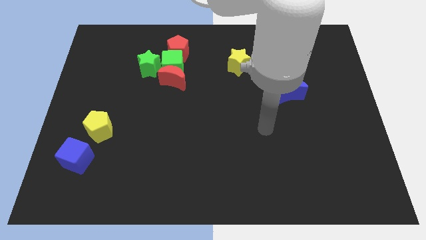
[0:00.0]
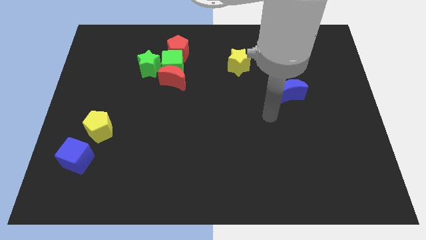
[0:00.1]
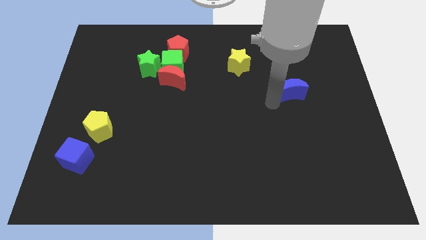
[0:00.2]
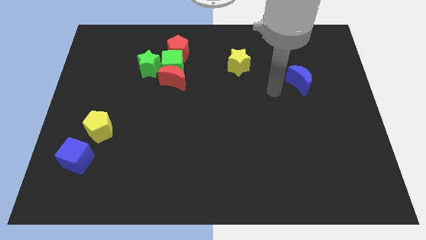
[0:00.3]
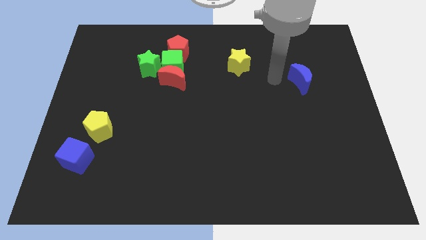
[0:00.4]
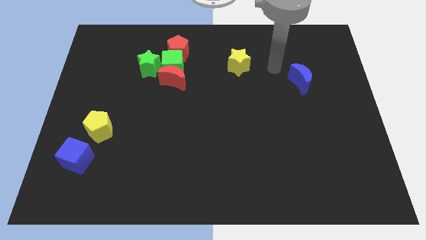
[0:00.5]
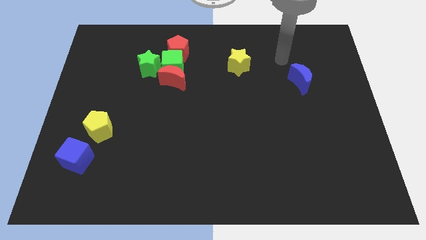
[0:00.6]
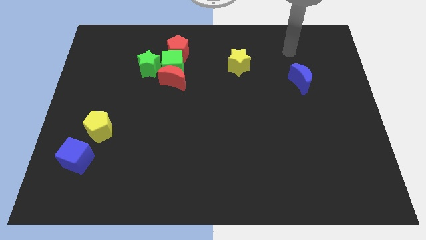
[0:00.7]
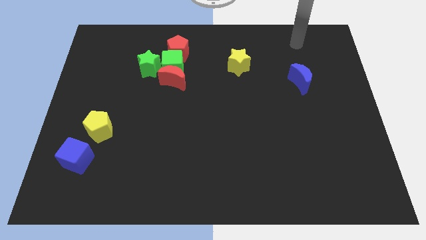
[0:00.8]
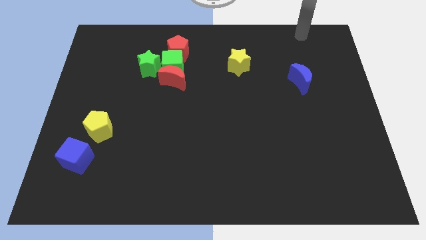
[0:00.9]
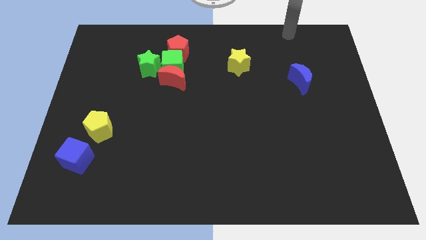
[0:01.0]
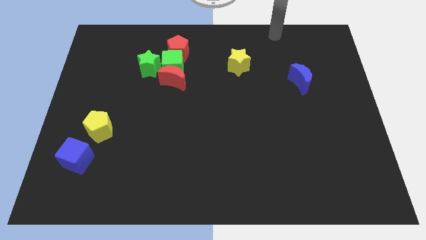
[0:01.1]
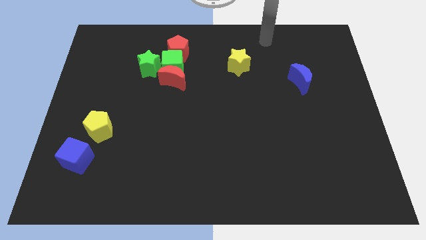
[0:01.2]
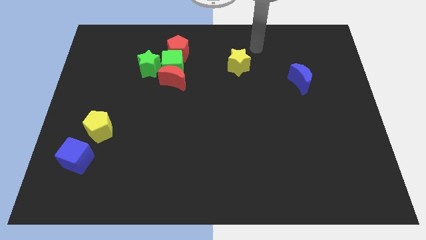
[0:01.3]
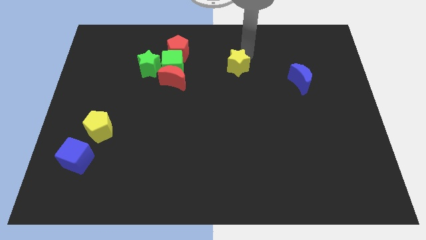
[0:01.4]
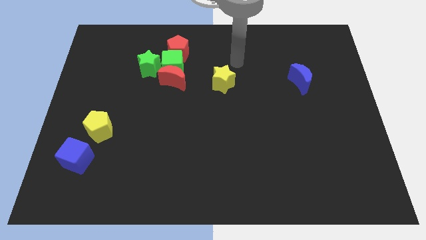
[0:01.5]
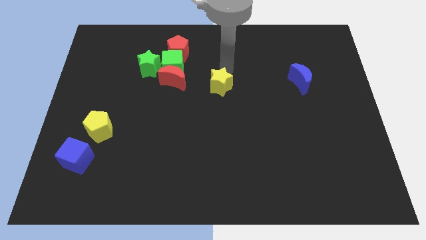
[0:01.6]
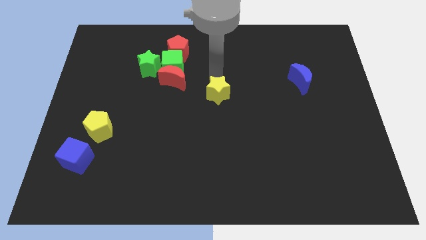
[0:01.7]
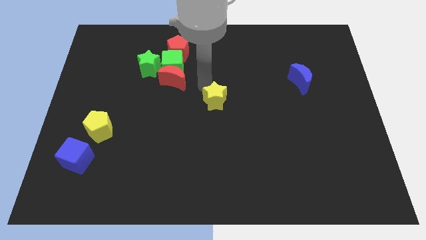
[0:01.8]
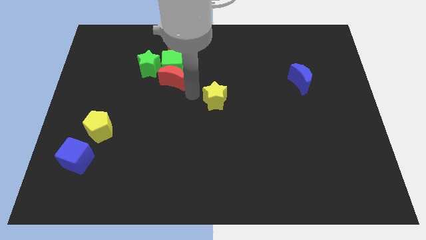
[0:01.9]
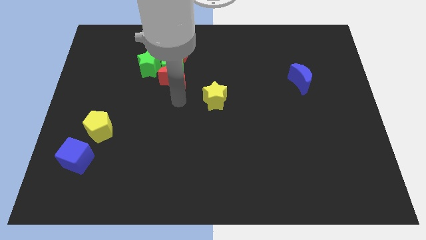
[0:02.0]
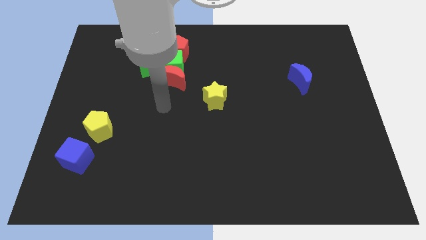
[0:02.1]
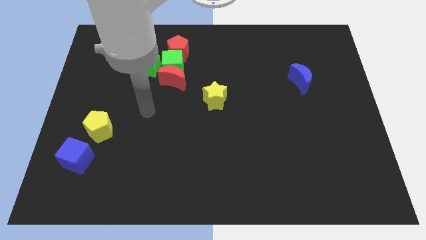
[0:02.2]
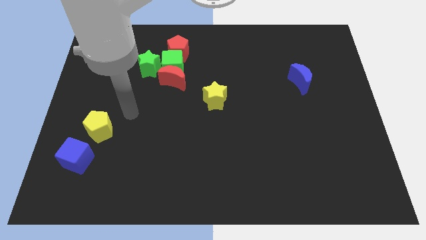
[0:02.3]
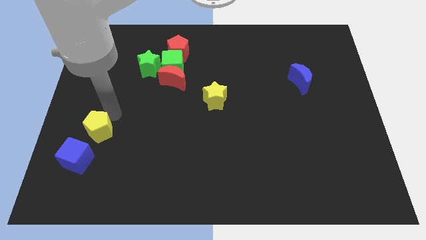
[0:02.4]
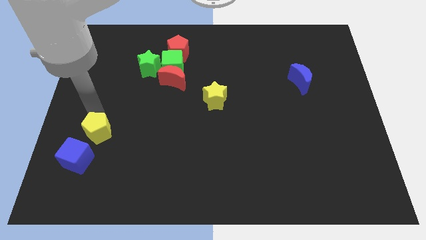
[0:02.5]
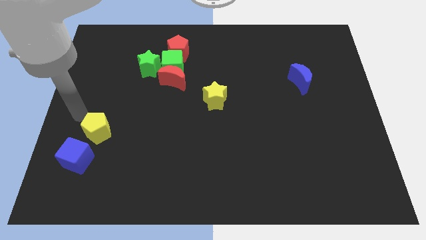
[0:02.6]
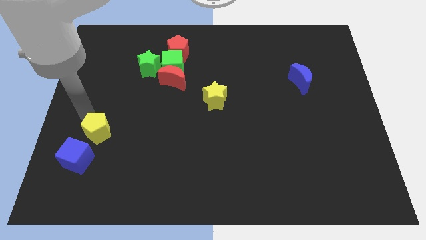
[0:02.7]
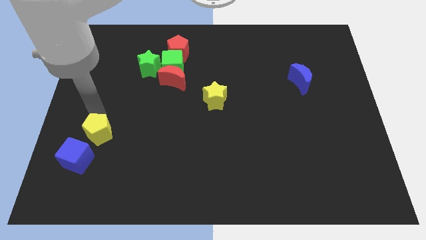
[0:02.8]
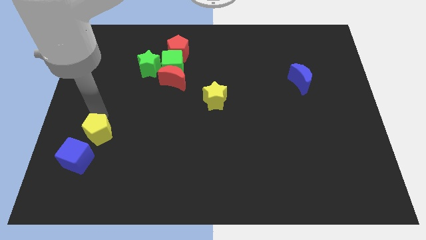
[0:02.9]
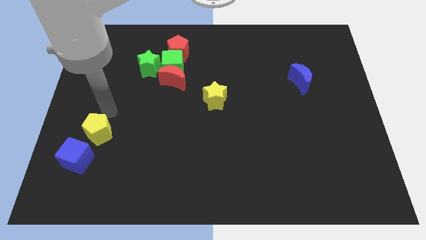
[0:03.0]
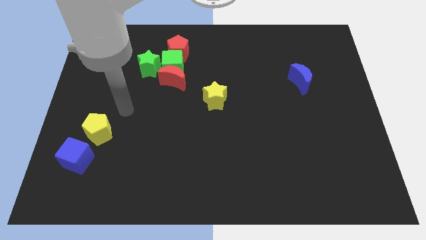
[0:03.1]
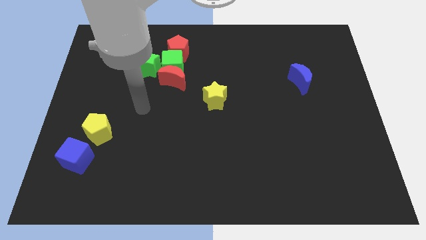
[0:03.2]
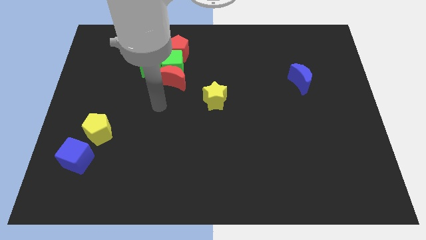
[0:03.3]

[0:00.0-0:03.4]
adjust the yellow pentagon yellow star and blue crescent diagonally to form a line

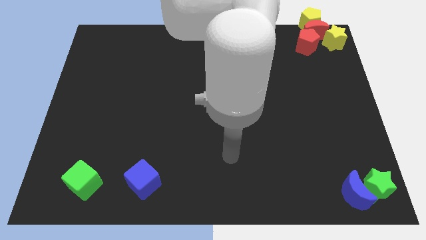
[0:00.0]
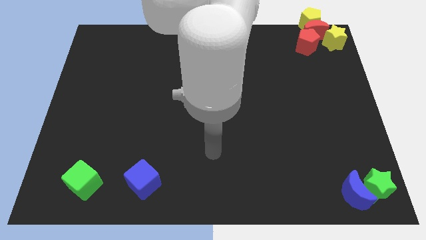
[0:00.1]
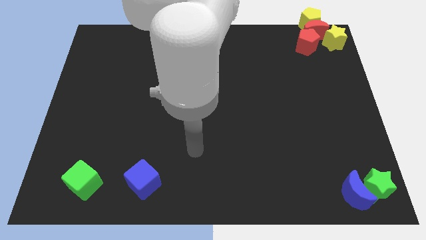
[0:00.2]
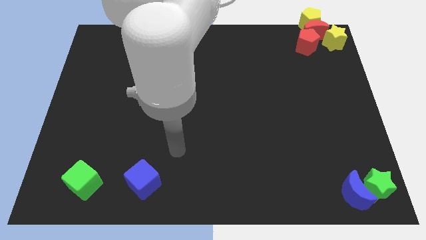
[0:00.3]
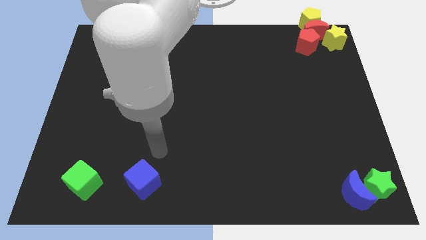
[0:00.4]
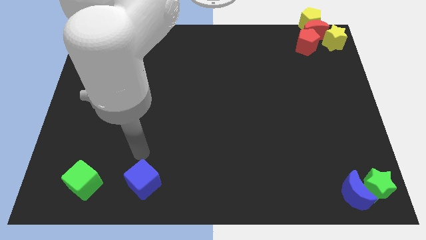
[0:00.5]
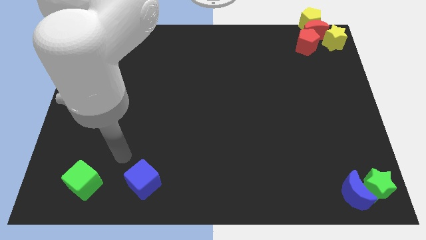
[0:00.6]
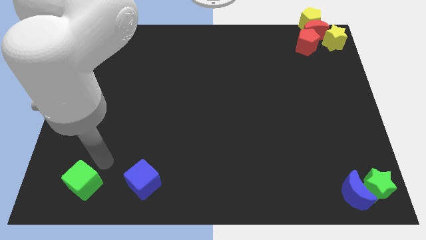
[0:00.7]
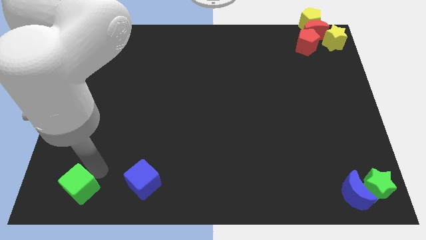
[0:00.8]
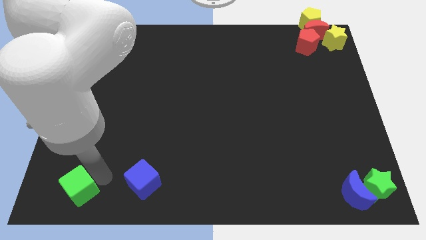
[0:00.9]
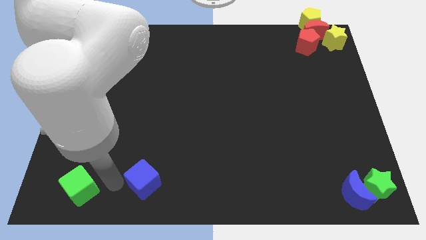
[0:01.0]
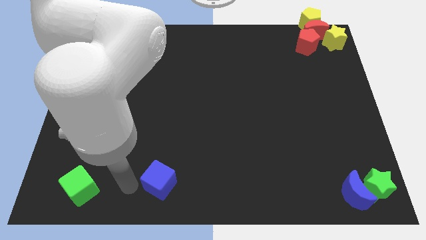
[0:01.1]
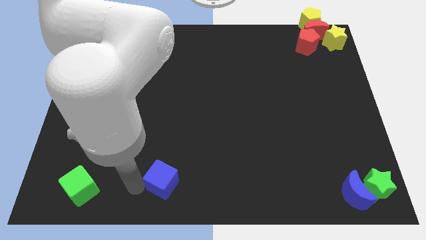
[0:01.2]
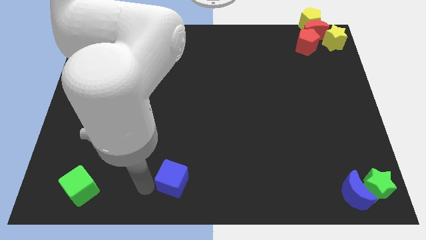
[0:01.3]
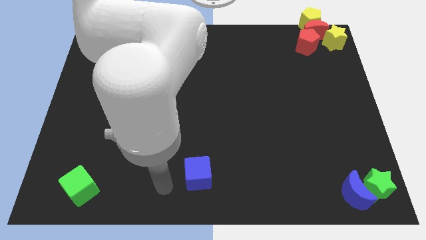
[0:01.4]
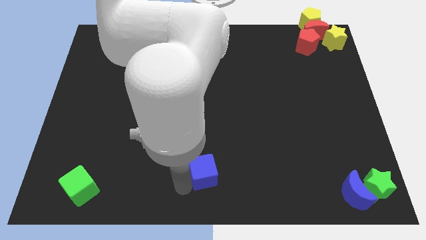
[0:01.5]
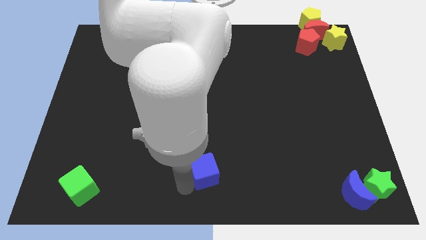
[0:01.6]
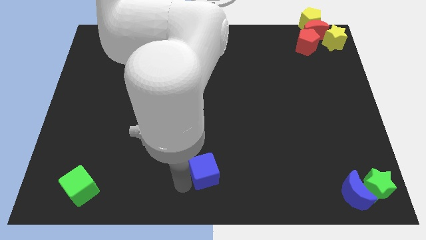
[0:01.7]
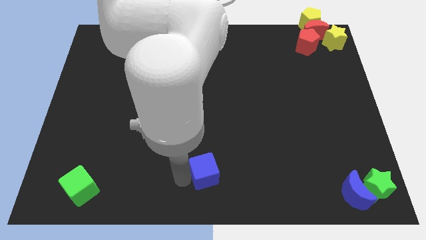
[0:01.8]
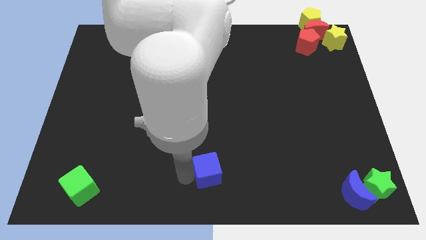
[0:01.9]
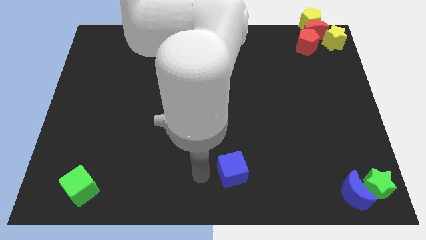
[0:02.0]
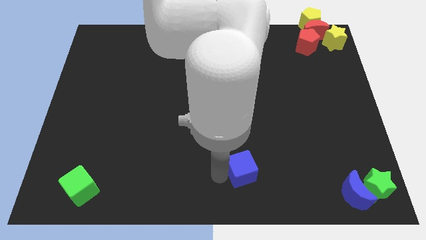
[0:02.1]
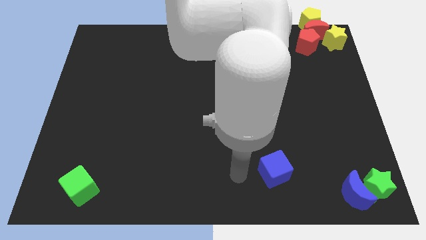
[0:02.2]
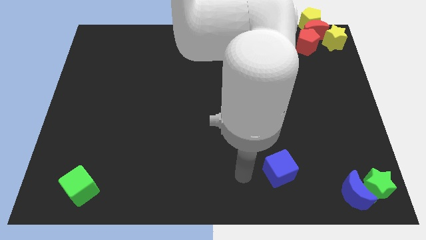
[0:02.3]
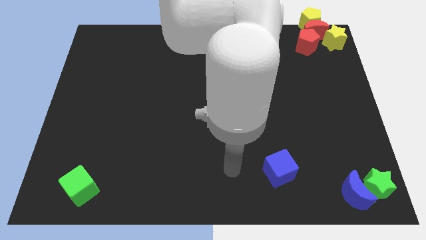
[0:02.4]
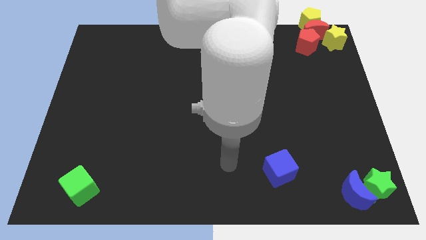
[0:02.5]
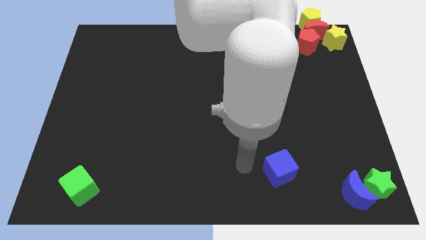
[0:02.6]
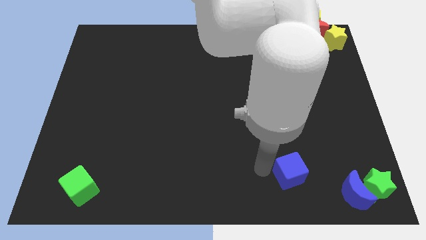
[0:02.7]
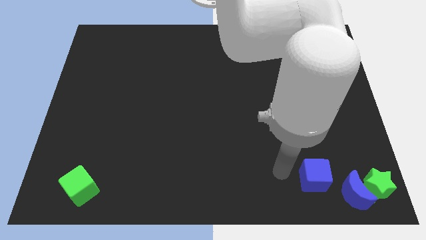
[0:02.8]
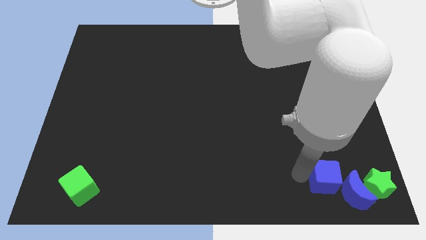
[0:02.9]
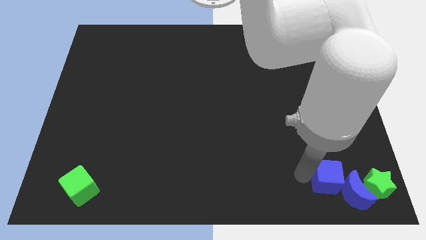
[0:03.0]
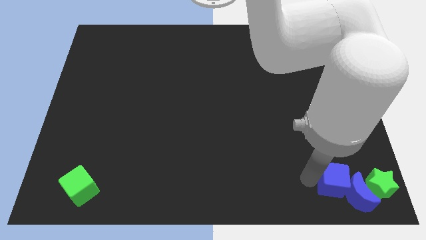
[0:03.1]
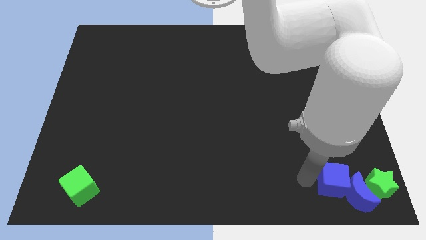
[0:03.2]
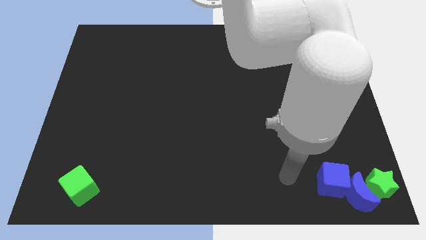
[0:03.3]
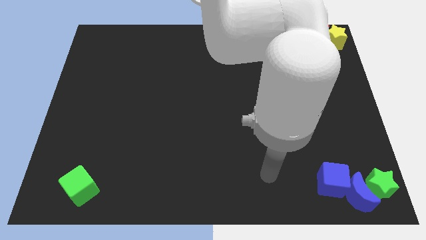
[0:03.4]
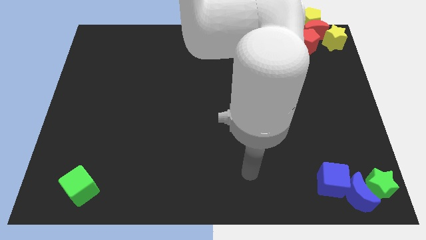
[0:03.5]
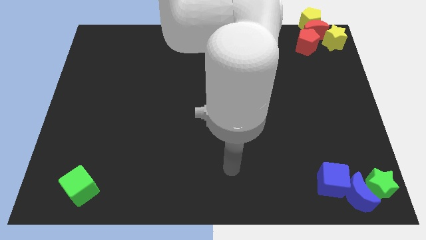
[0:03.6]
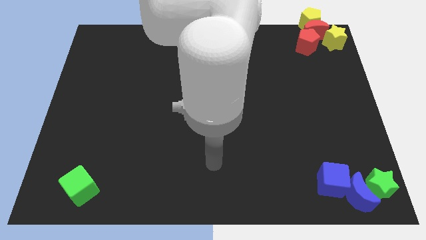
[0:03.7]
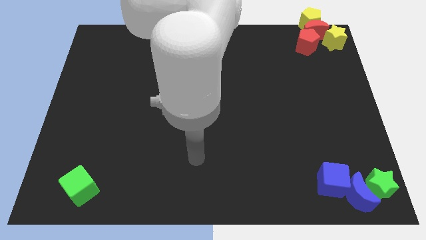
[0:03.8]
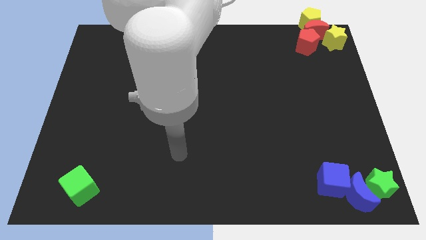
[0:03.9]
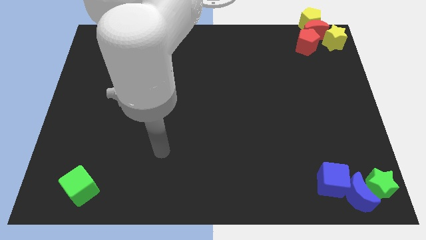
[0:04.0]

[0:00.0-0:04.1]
drag the blue cube in to blue crescent

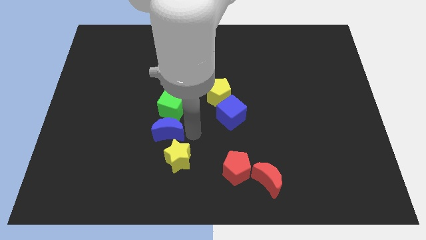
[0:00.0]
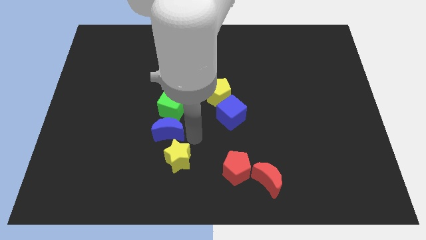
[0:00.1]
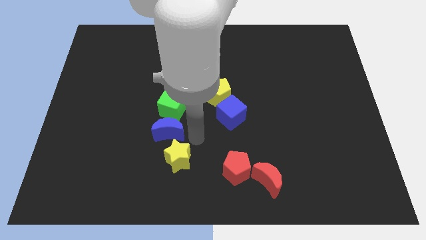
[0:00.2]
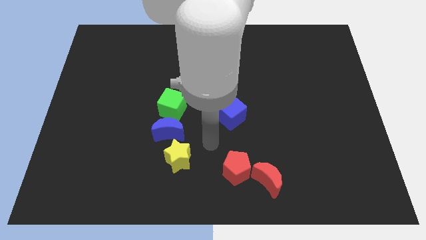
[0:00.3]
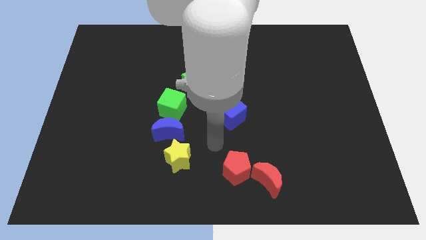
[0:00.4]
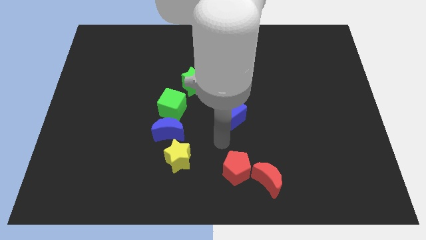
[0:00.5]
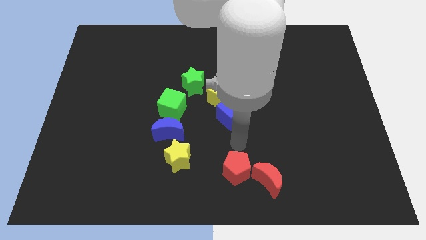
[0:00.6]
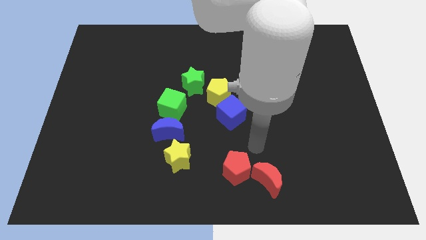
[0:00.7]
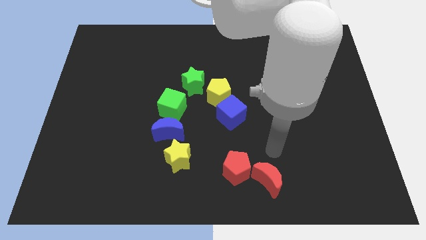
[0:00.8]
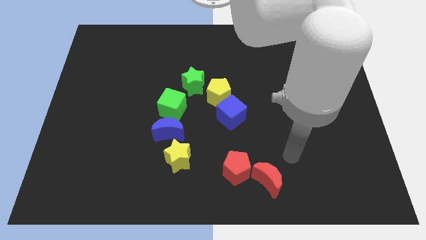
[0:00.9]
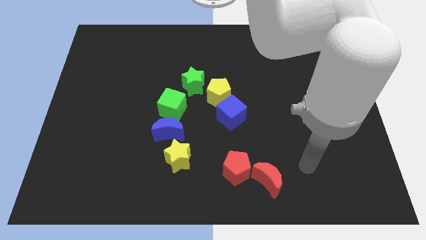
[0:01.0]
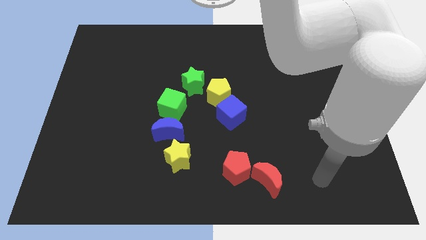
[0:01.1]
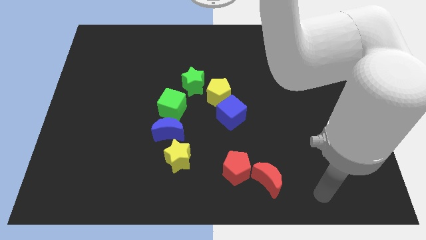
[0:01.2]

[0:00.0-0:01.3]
place your arm at the right of the red crescent

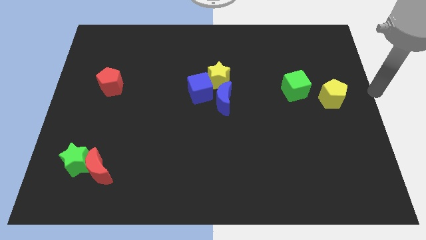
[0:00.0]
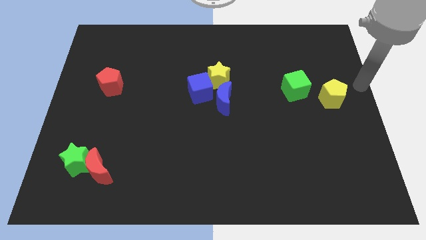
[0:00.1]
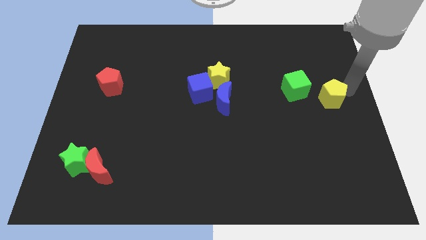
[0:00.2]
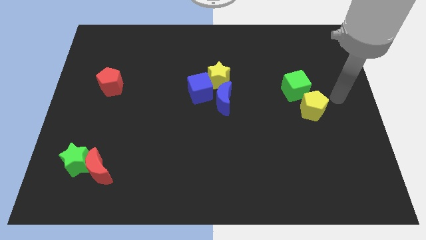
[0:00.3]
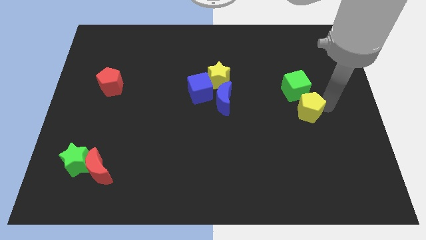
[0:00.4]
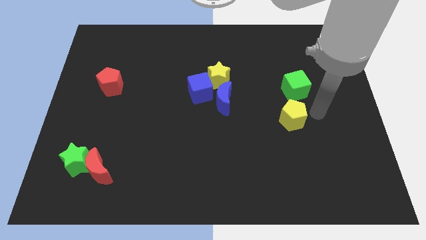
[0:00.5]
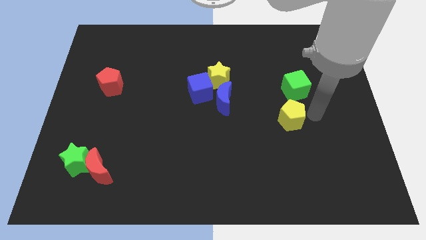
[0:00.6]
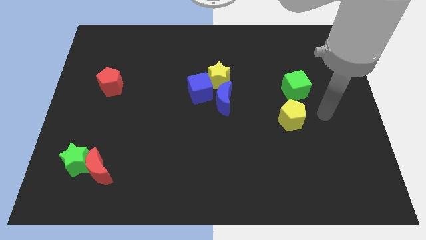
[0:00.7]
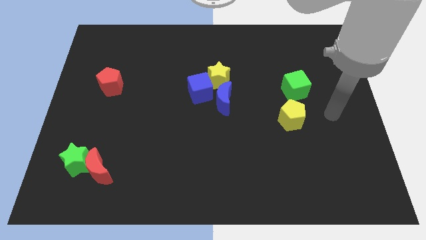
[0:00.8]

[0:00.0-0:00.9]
move the yellow block right below the green cube
